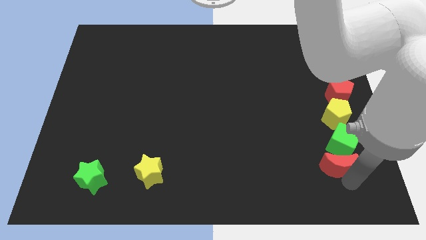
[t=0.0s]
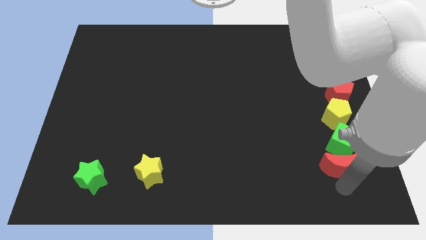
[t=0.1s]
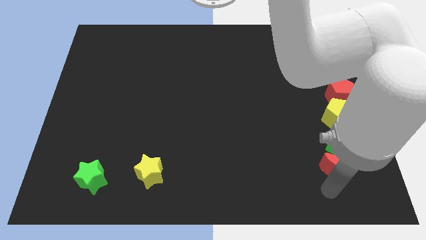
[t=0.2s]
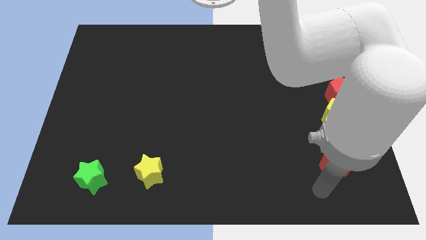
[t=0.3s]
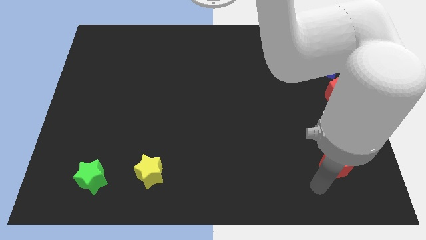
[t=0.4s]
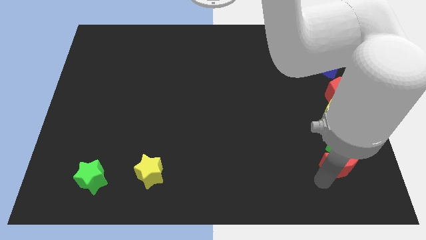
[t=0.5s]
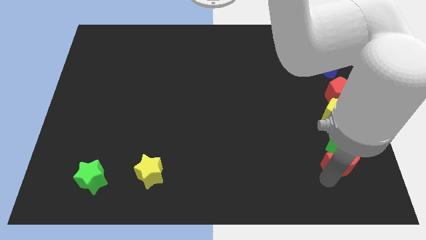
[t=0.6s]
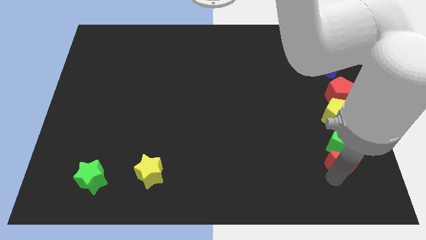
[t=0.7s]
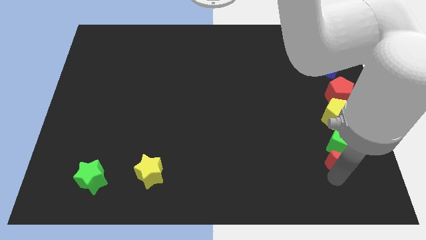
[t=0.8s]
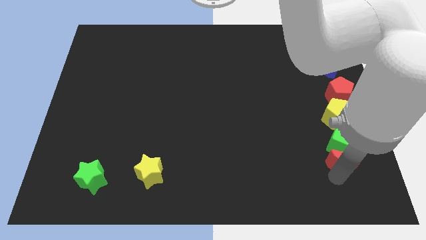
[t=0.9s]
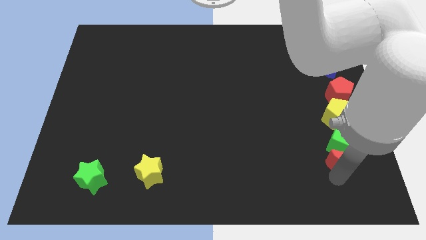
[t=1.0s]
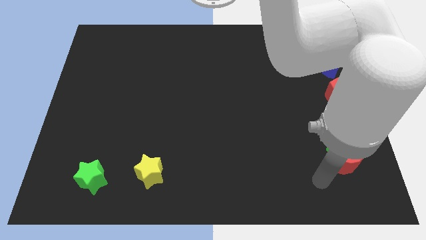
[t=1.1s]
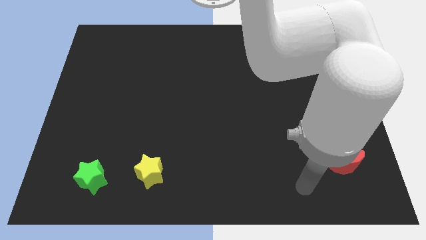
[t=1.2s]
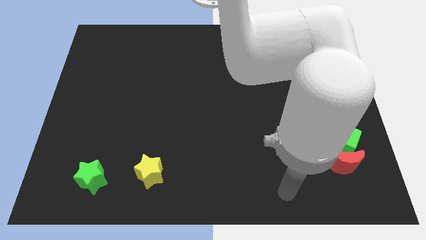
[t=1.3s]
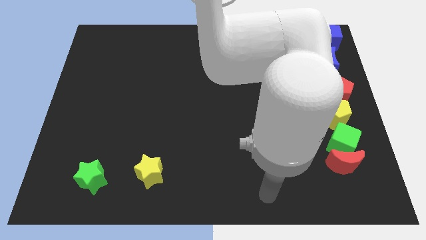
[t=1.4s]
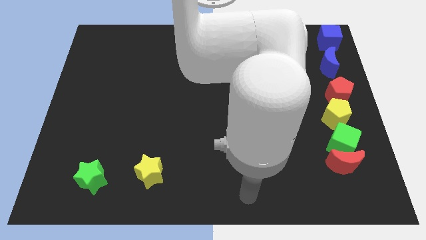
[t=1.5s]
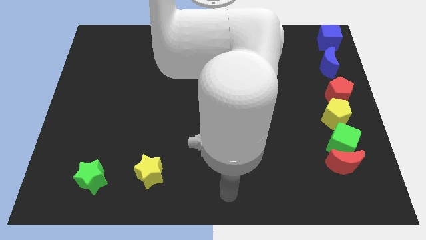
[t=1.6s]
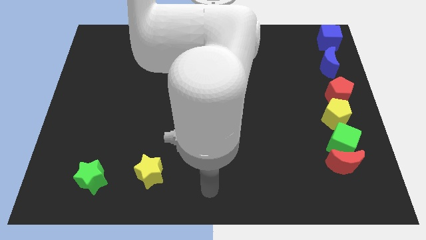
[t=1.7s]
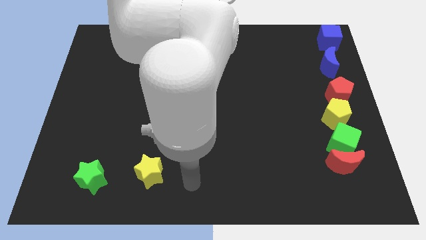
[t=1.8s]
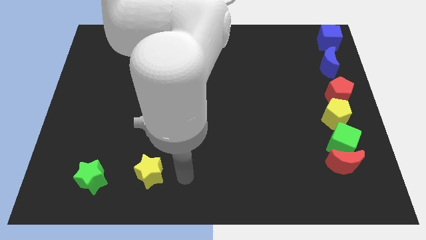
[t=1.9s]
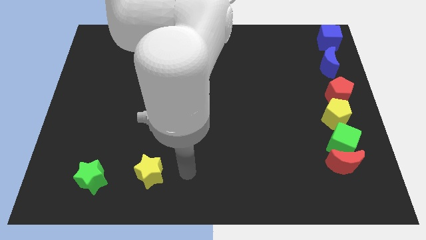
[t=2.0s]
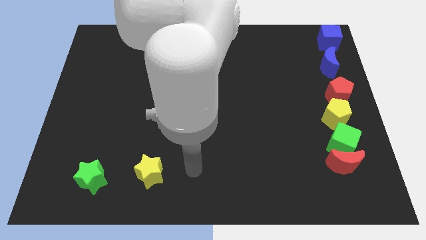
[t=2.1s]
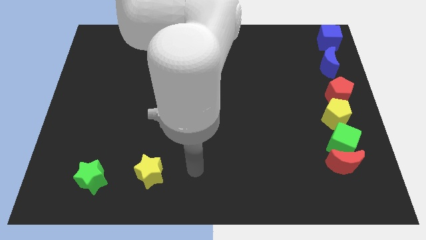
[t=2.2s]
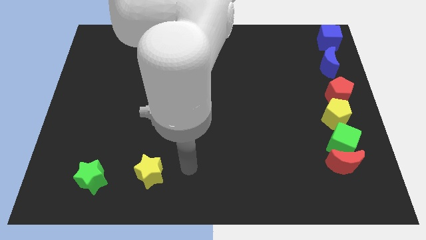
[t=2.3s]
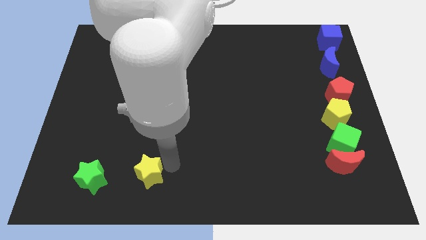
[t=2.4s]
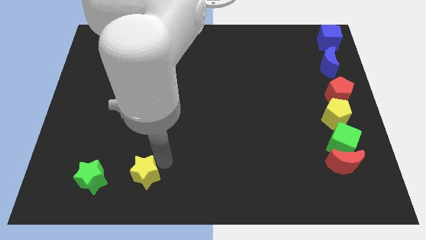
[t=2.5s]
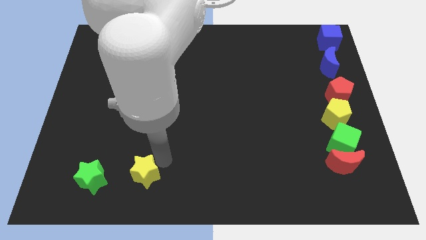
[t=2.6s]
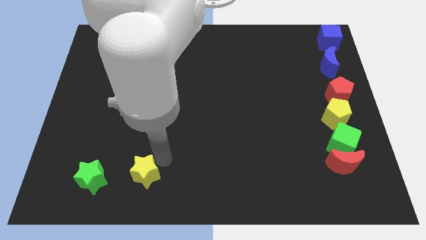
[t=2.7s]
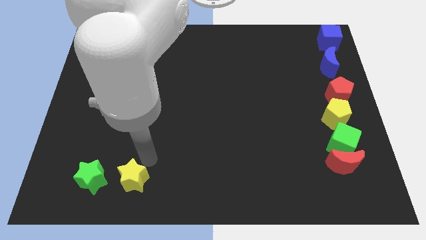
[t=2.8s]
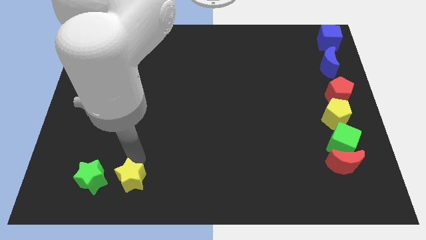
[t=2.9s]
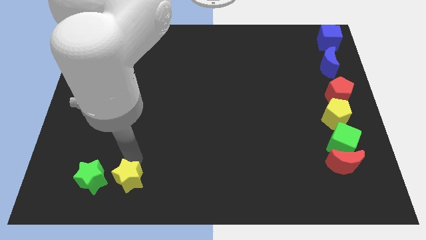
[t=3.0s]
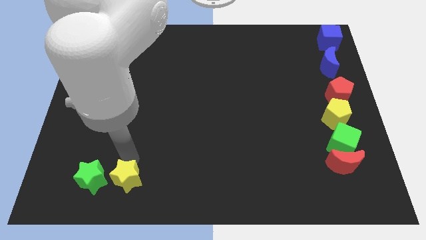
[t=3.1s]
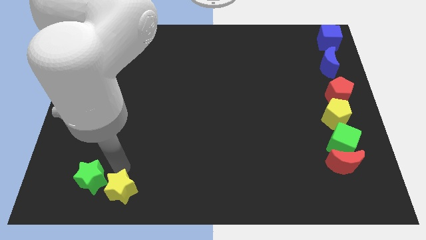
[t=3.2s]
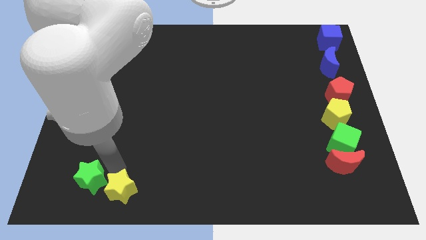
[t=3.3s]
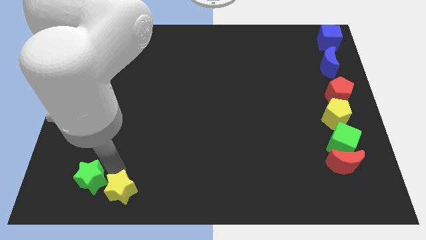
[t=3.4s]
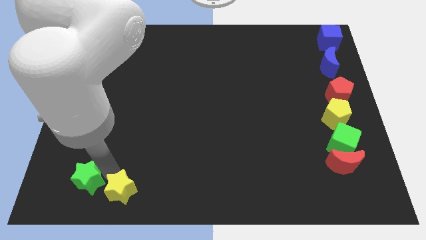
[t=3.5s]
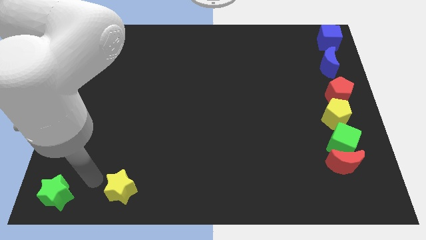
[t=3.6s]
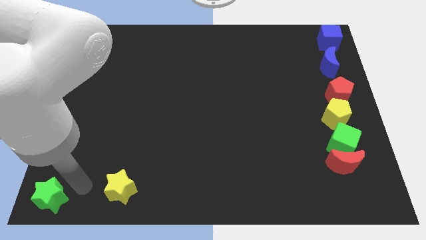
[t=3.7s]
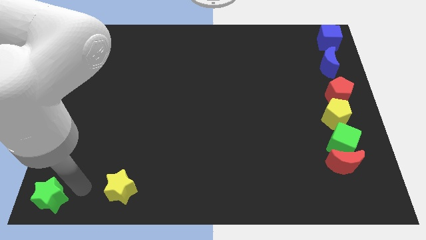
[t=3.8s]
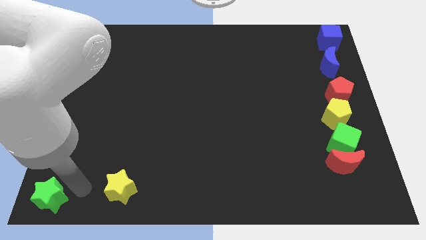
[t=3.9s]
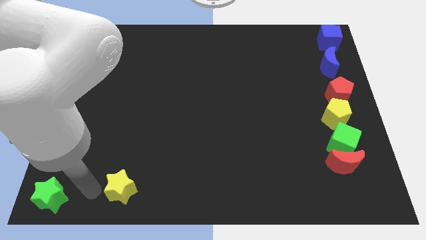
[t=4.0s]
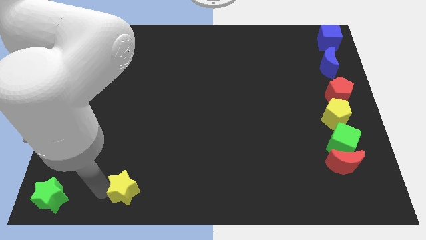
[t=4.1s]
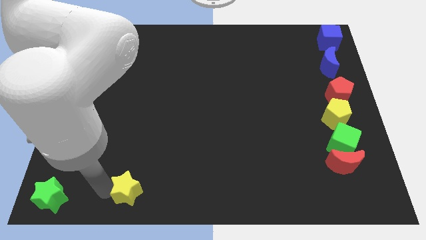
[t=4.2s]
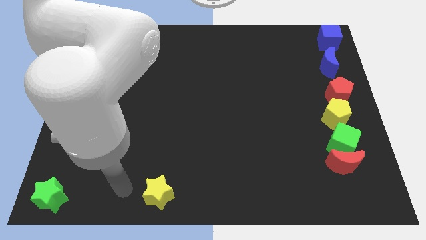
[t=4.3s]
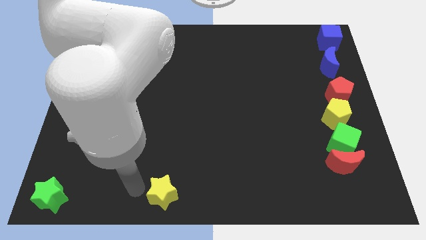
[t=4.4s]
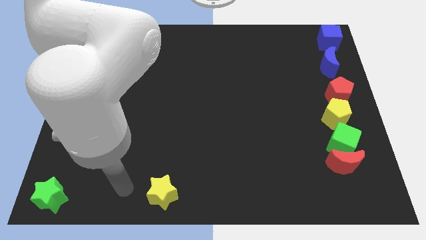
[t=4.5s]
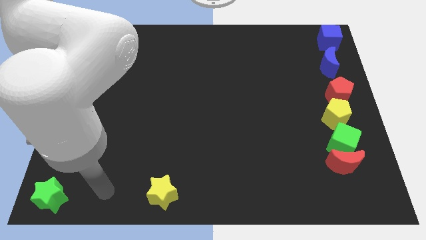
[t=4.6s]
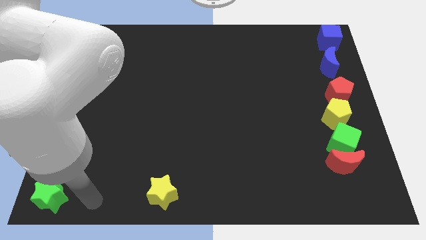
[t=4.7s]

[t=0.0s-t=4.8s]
separate the green star from the yellow star

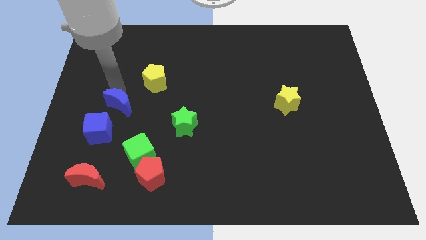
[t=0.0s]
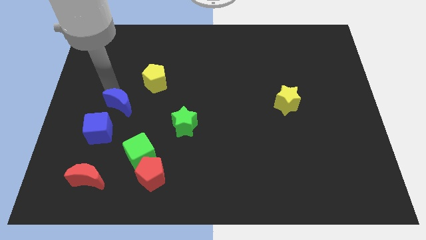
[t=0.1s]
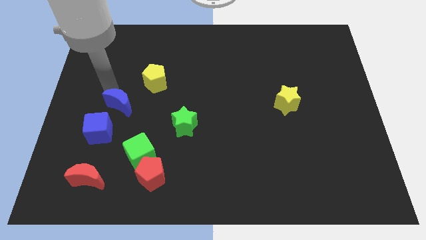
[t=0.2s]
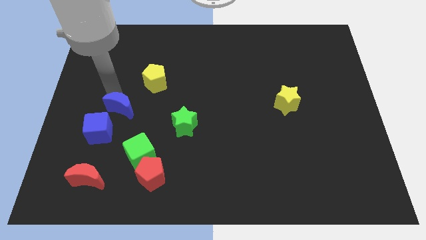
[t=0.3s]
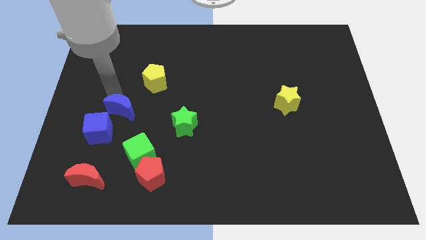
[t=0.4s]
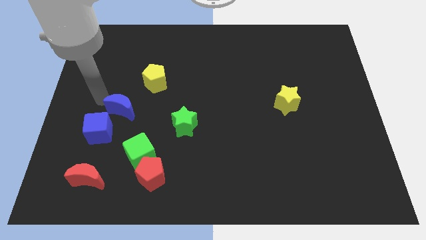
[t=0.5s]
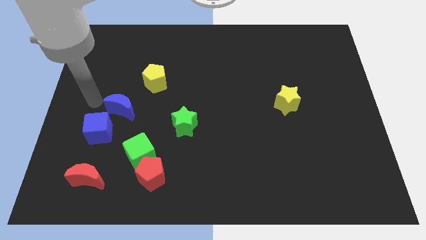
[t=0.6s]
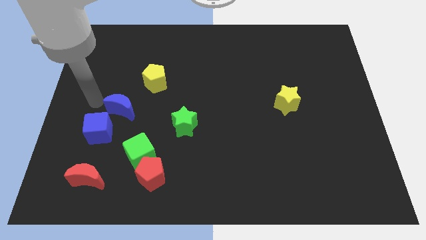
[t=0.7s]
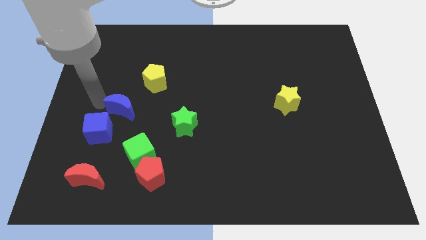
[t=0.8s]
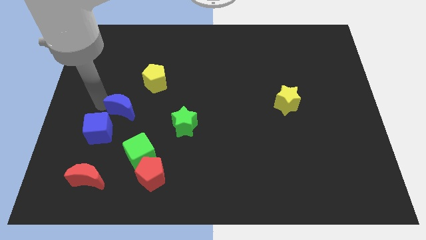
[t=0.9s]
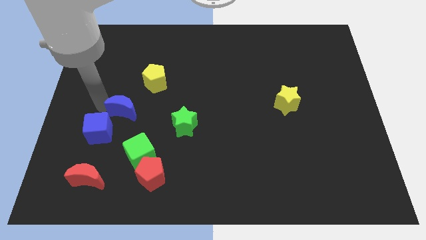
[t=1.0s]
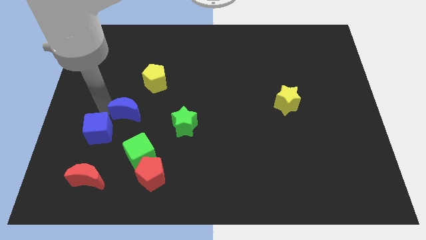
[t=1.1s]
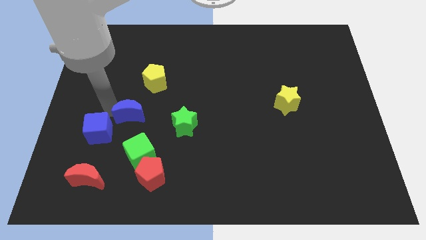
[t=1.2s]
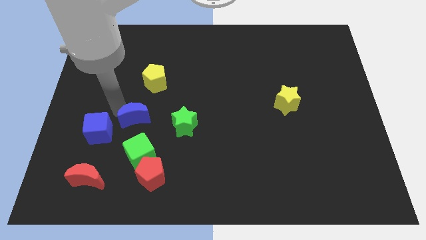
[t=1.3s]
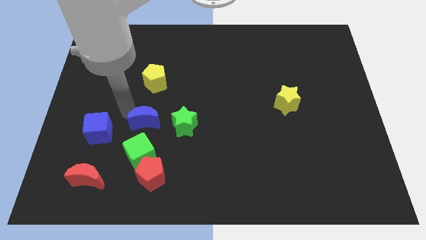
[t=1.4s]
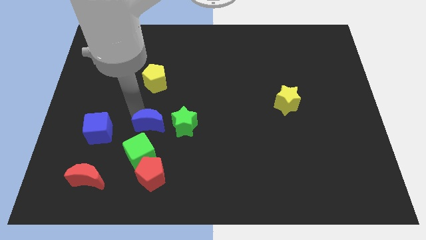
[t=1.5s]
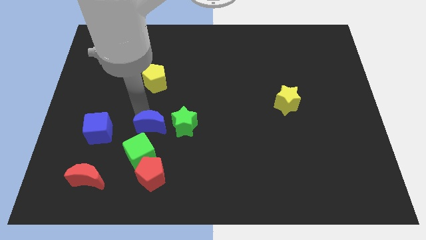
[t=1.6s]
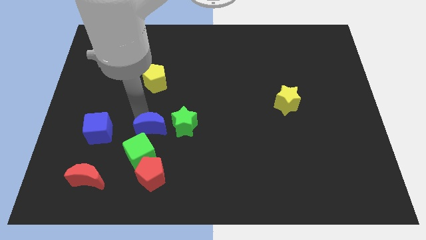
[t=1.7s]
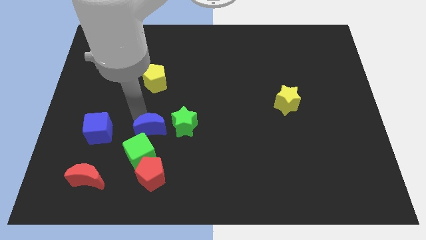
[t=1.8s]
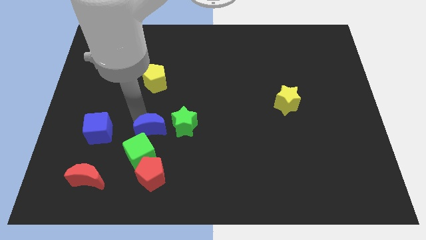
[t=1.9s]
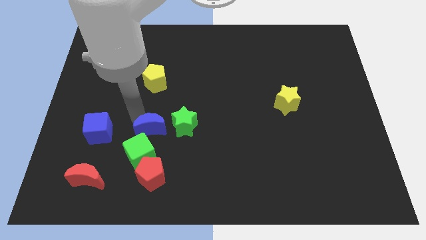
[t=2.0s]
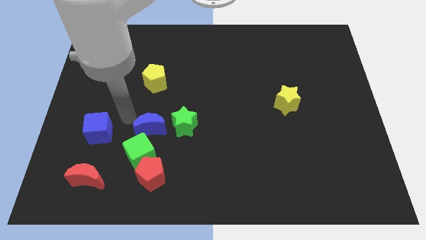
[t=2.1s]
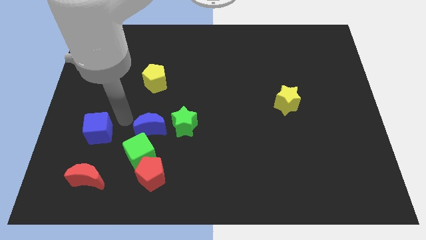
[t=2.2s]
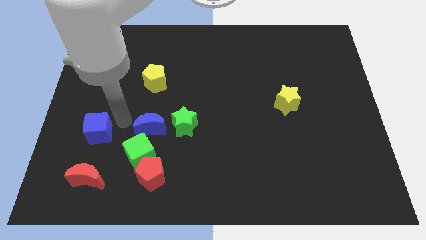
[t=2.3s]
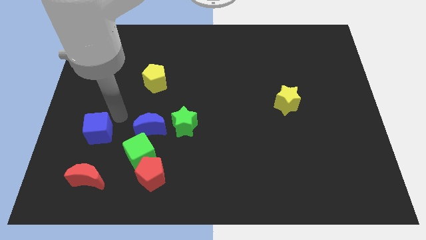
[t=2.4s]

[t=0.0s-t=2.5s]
move the blue crescent close to green cube

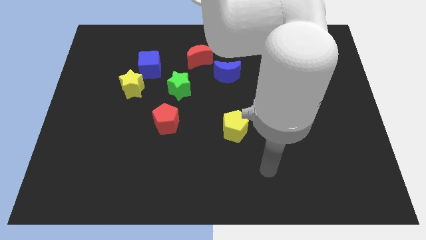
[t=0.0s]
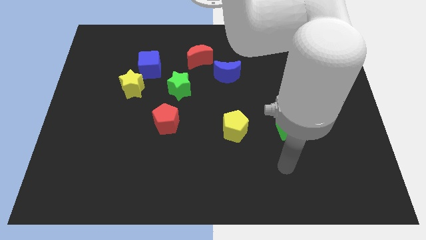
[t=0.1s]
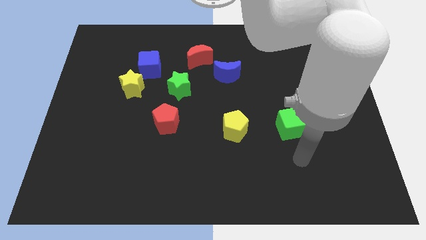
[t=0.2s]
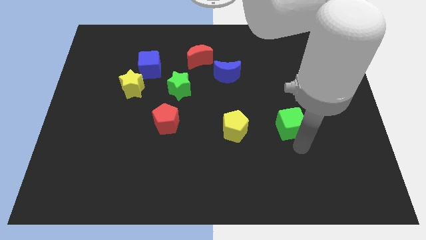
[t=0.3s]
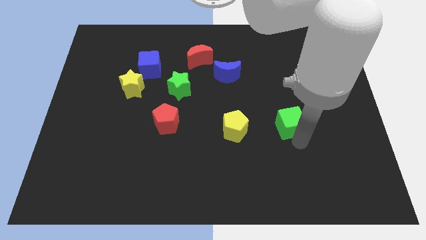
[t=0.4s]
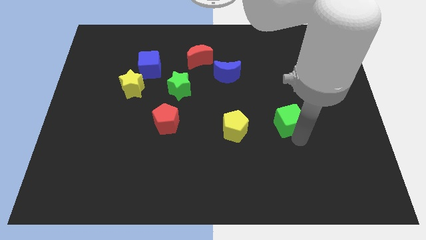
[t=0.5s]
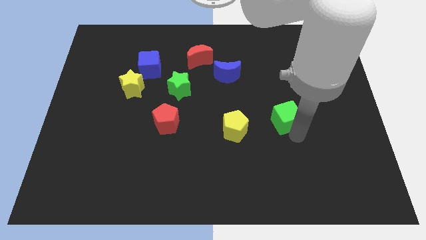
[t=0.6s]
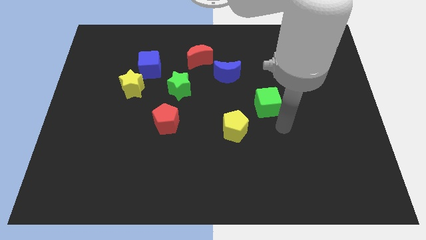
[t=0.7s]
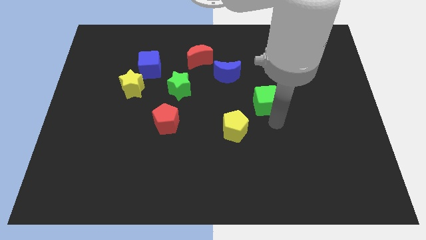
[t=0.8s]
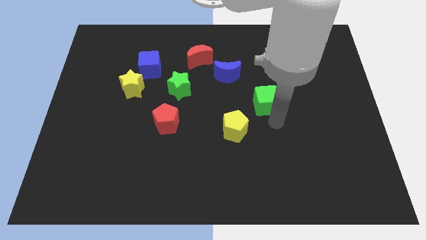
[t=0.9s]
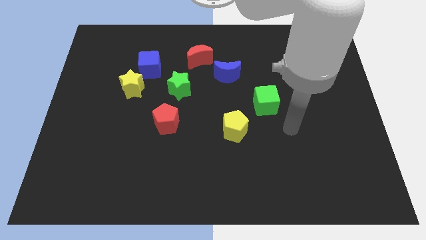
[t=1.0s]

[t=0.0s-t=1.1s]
move the green cube diagonally to the yellow pentagon

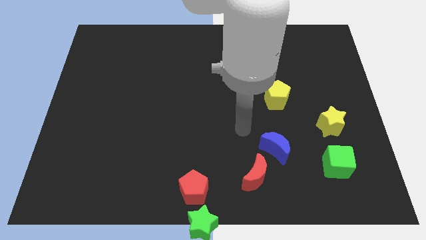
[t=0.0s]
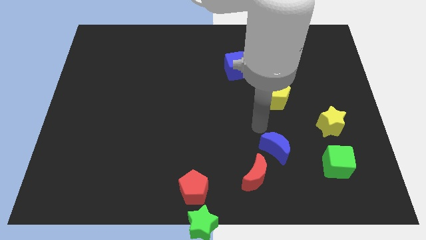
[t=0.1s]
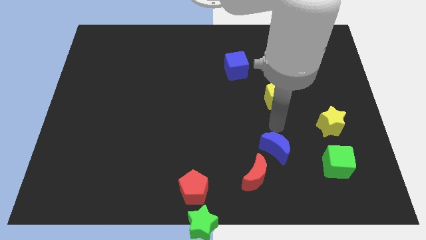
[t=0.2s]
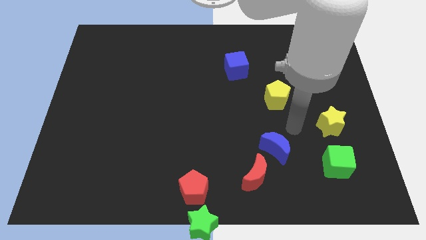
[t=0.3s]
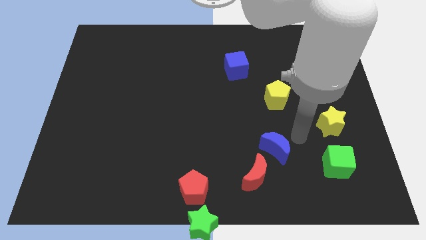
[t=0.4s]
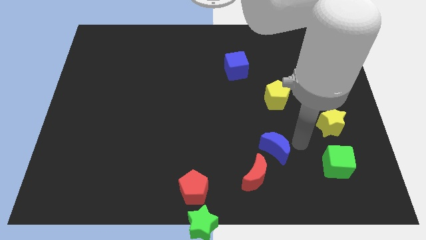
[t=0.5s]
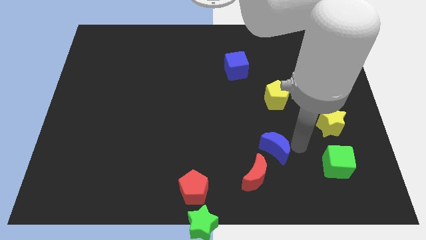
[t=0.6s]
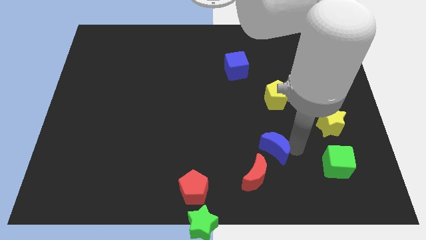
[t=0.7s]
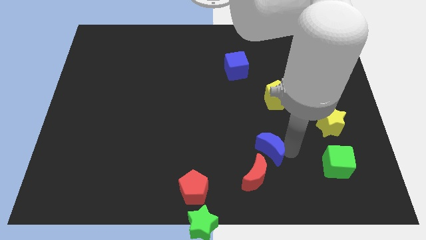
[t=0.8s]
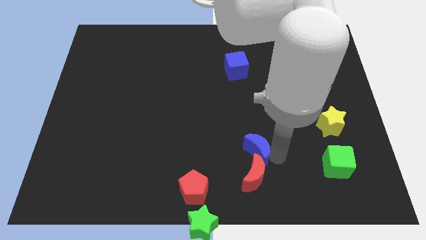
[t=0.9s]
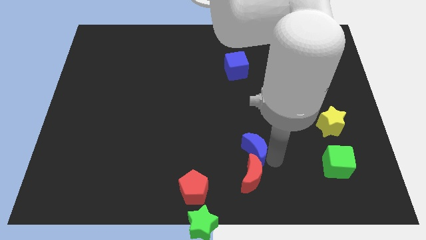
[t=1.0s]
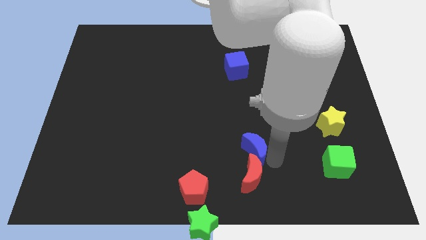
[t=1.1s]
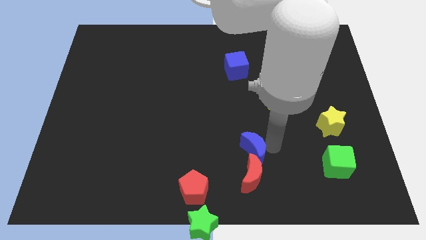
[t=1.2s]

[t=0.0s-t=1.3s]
move your arm towards blue crescent
